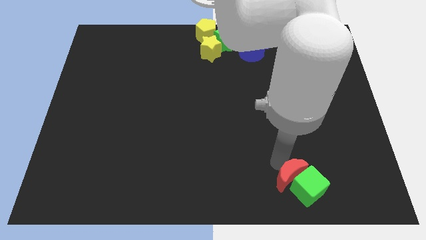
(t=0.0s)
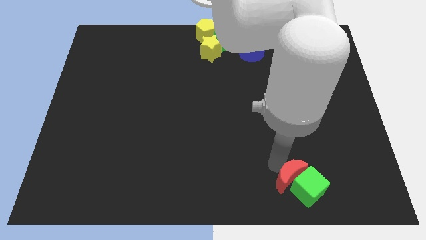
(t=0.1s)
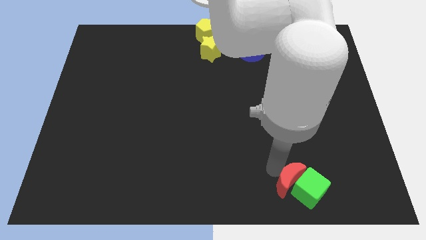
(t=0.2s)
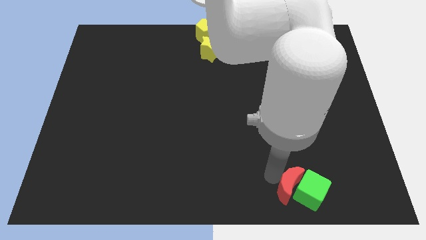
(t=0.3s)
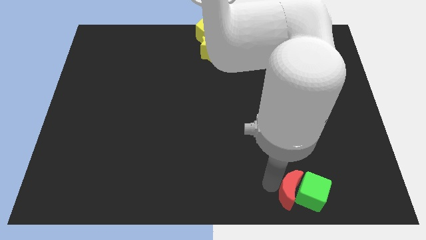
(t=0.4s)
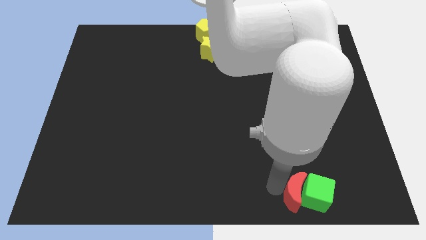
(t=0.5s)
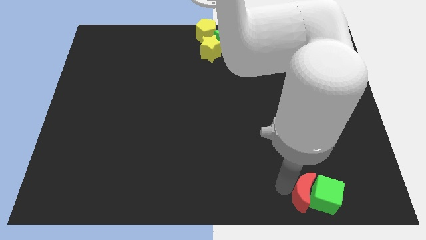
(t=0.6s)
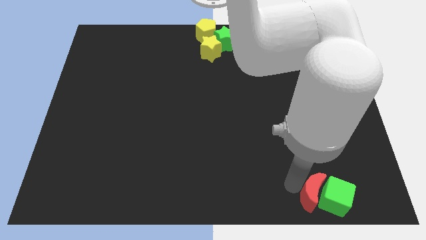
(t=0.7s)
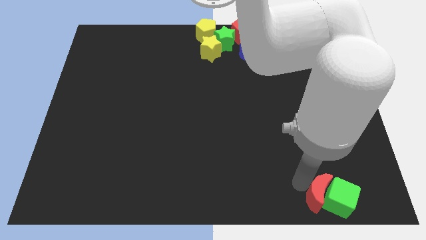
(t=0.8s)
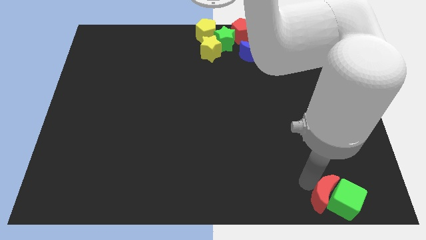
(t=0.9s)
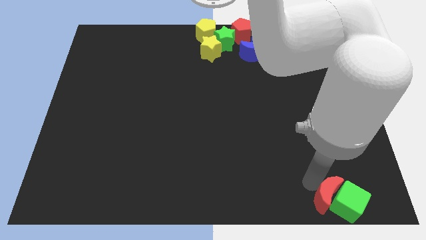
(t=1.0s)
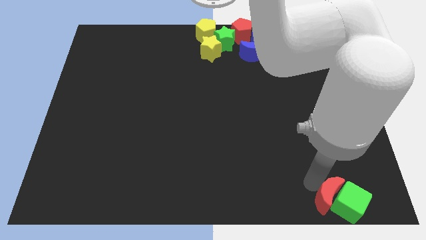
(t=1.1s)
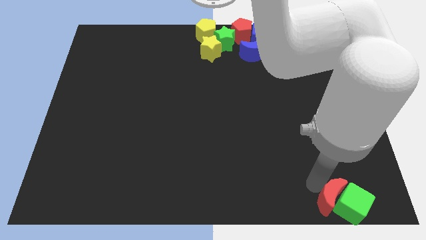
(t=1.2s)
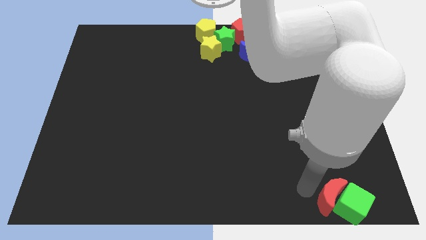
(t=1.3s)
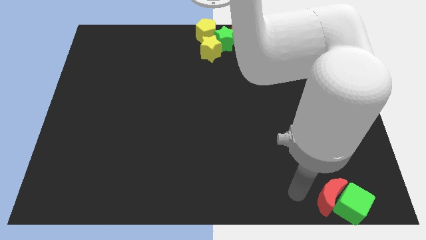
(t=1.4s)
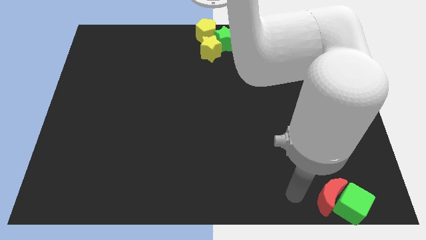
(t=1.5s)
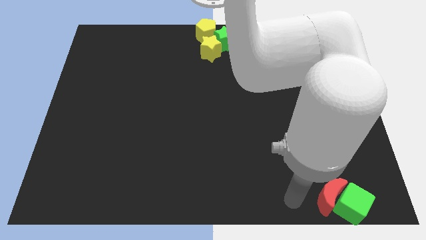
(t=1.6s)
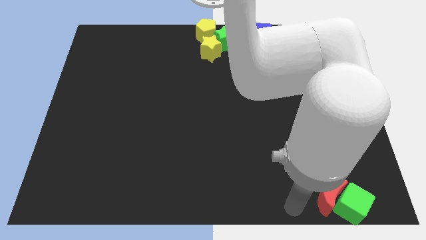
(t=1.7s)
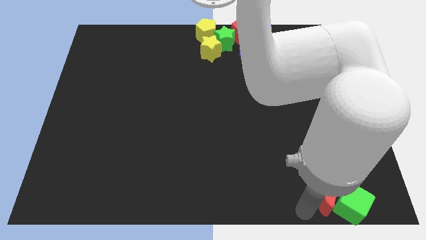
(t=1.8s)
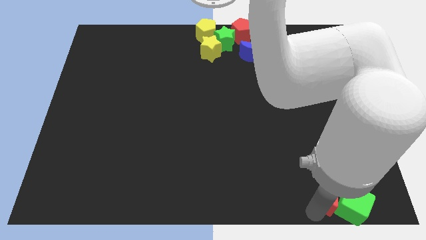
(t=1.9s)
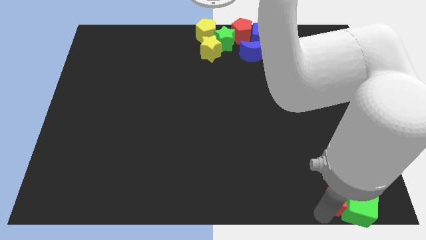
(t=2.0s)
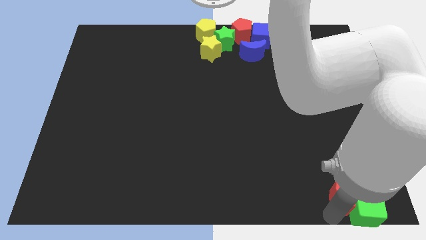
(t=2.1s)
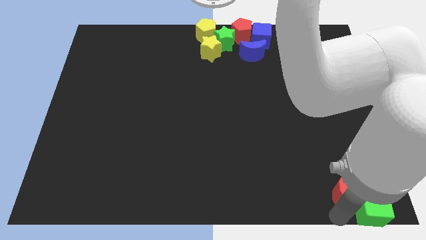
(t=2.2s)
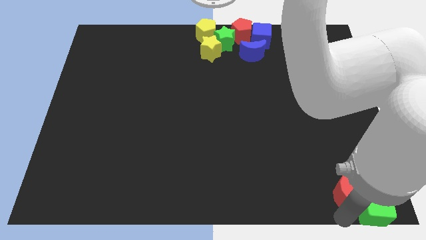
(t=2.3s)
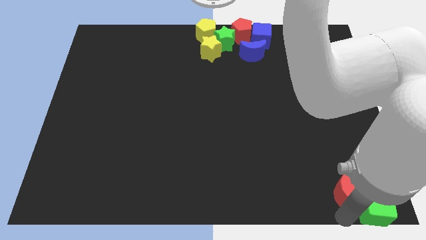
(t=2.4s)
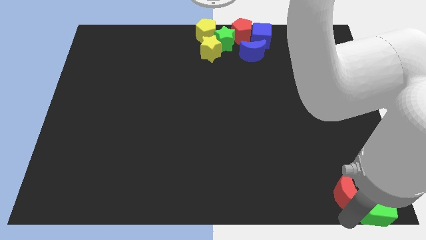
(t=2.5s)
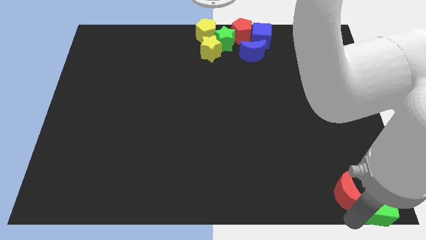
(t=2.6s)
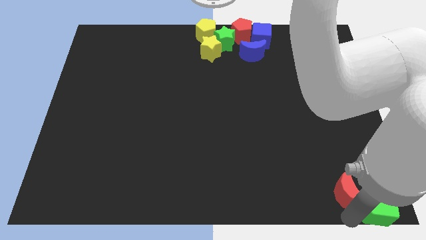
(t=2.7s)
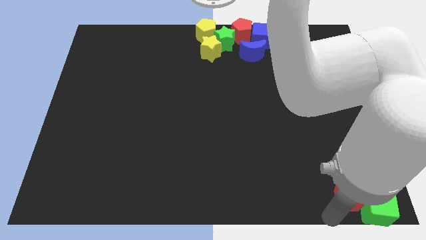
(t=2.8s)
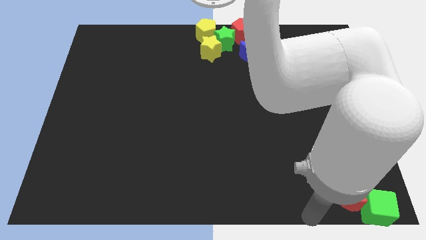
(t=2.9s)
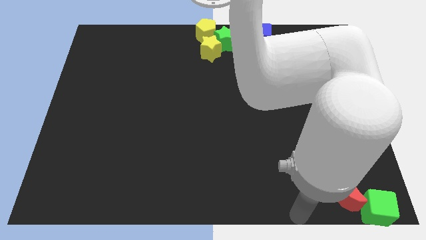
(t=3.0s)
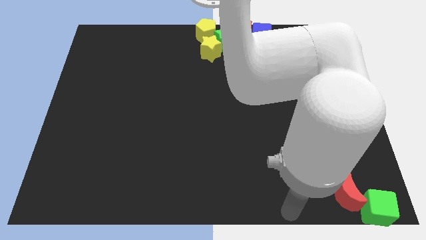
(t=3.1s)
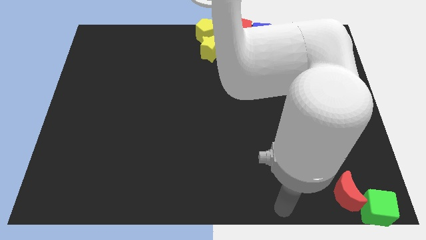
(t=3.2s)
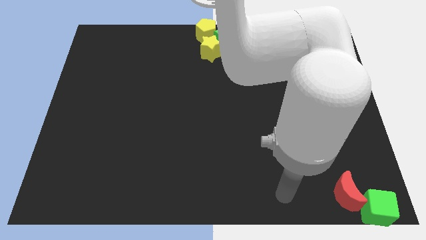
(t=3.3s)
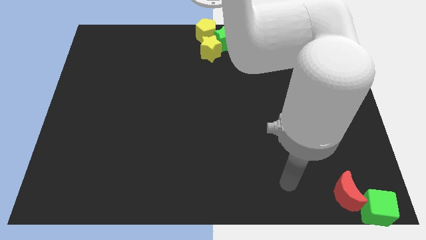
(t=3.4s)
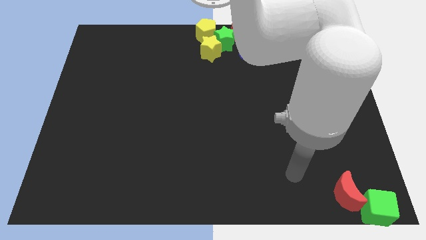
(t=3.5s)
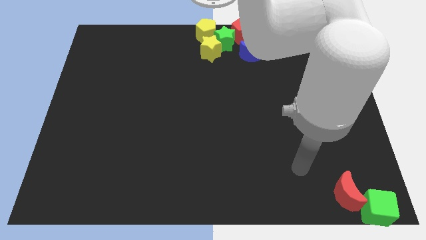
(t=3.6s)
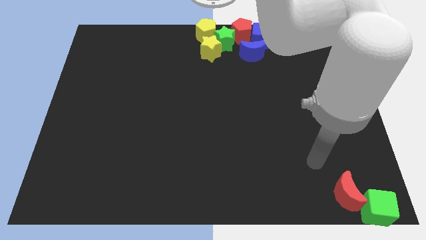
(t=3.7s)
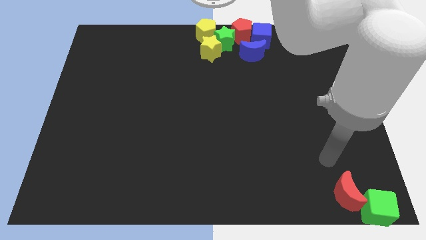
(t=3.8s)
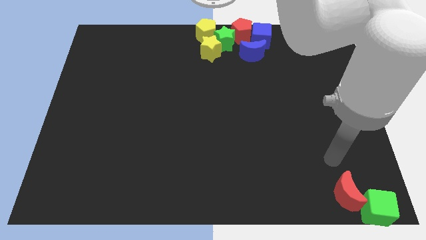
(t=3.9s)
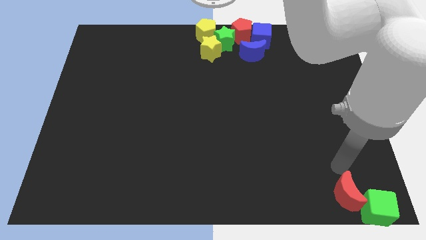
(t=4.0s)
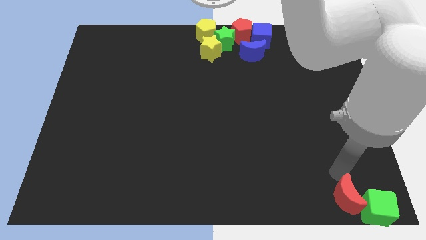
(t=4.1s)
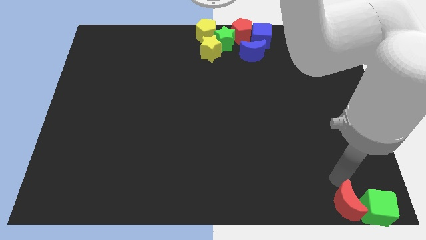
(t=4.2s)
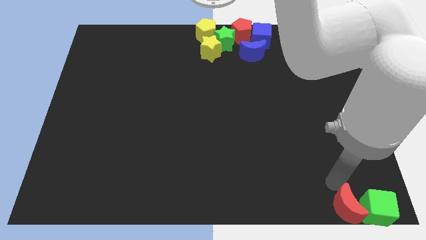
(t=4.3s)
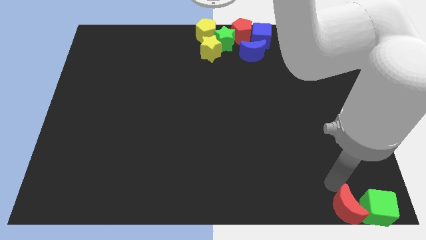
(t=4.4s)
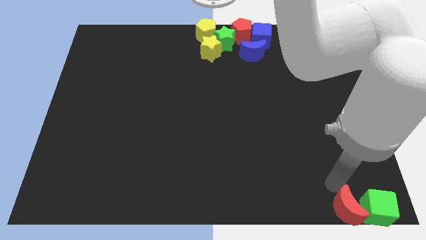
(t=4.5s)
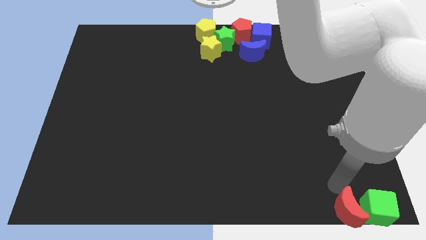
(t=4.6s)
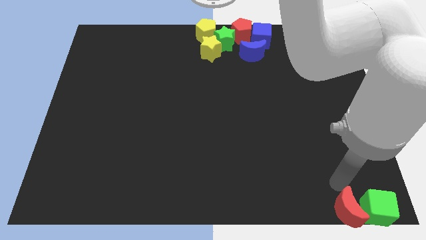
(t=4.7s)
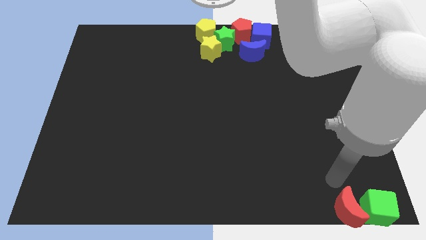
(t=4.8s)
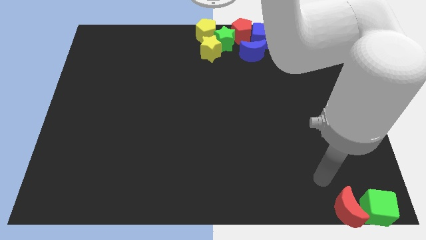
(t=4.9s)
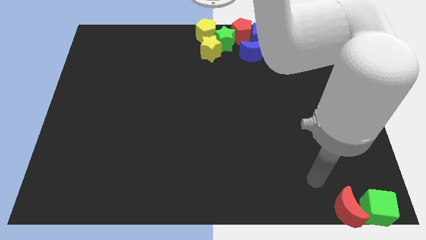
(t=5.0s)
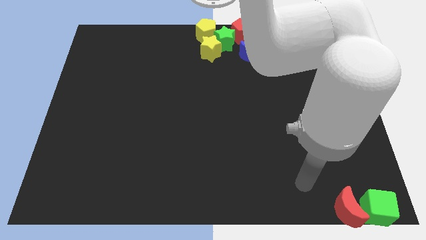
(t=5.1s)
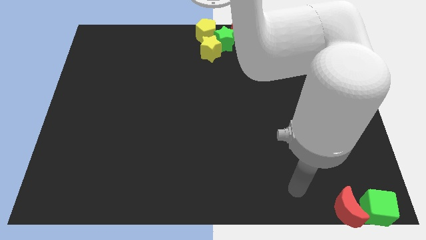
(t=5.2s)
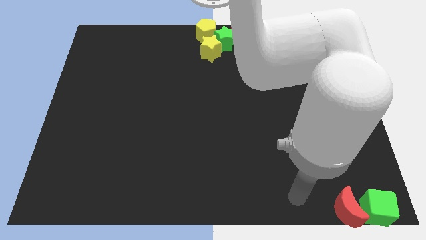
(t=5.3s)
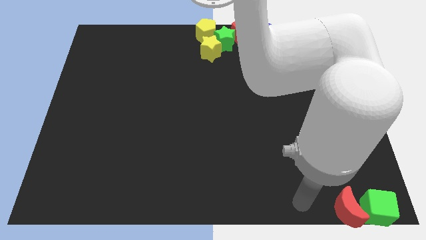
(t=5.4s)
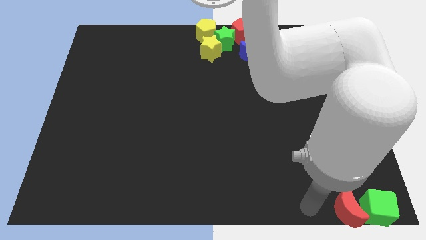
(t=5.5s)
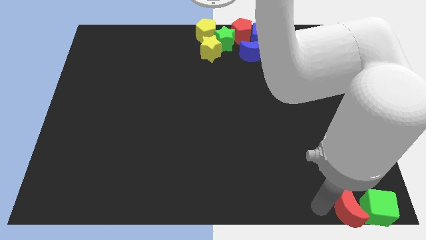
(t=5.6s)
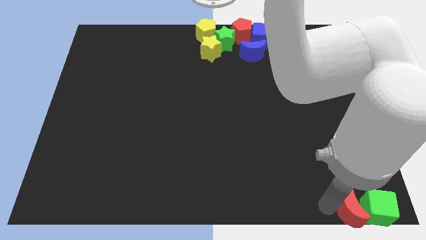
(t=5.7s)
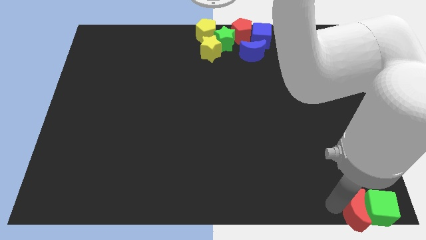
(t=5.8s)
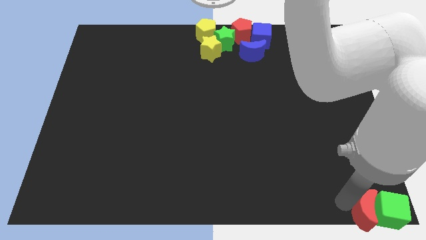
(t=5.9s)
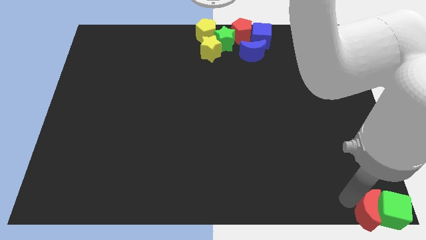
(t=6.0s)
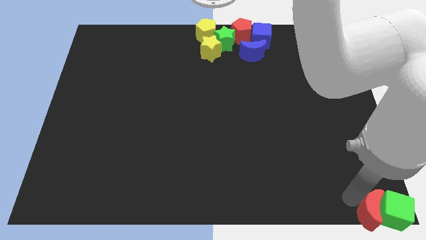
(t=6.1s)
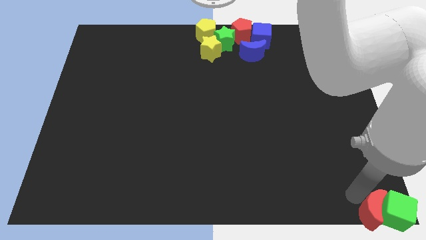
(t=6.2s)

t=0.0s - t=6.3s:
push the green cube and the red moon towards the bottom right corner

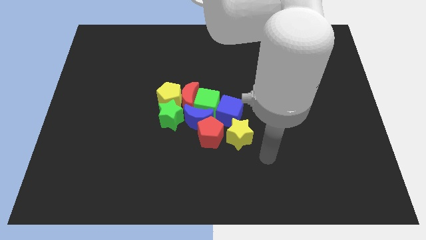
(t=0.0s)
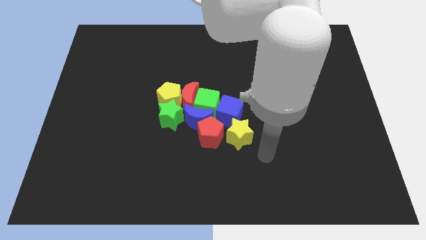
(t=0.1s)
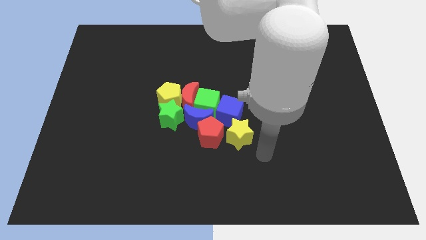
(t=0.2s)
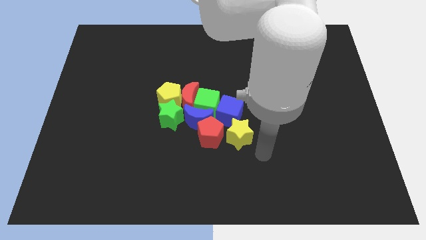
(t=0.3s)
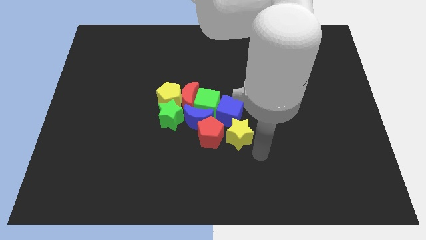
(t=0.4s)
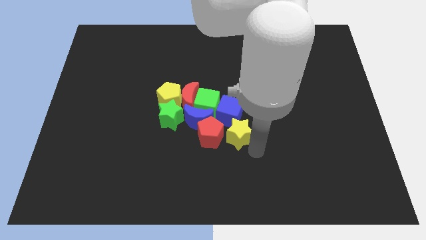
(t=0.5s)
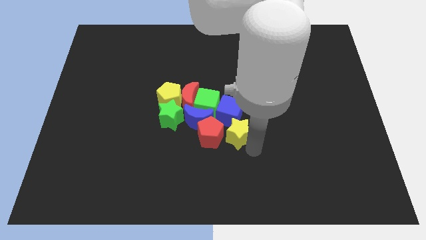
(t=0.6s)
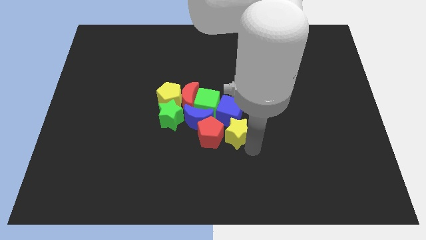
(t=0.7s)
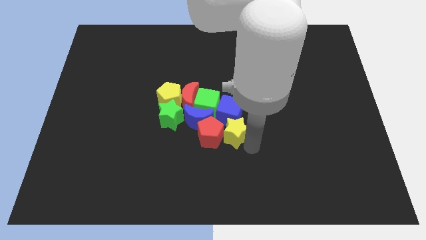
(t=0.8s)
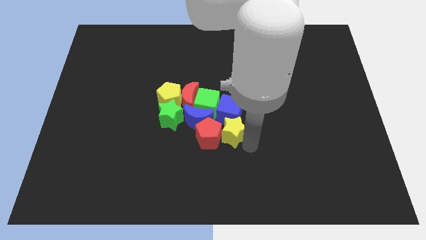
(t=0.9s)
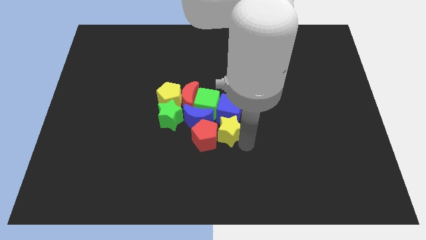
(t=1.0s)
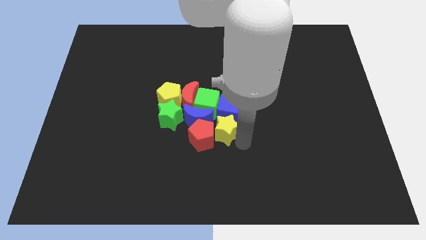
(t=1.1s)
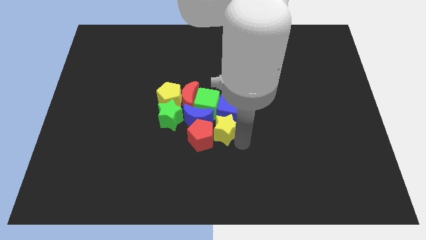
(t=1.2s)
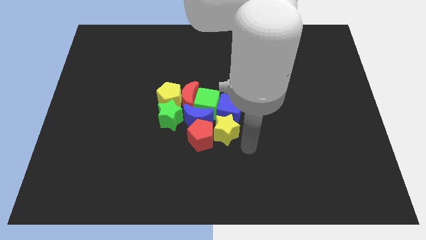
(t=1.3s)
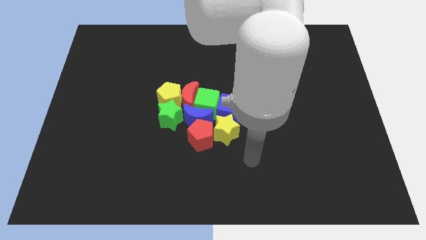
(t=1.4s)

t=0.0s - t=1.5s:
push the yellow star towards the red pentagon

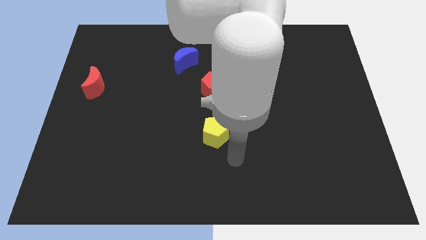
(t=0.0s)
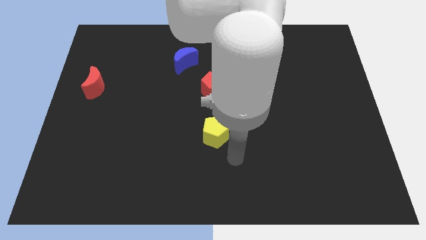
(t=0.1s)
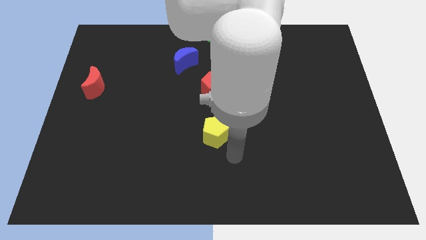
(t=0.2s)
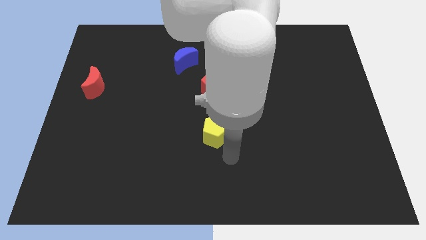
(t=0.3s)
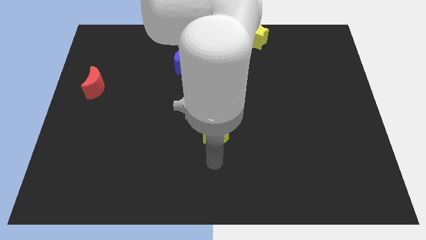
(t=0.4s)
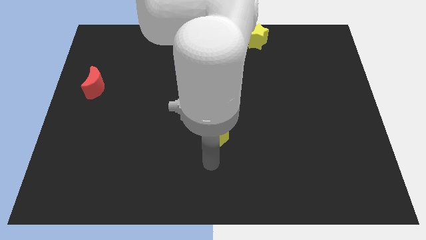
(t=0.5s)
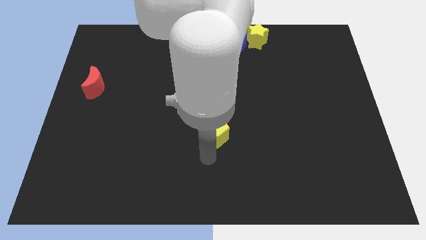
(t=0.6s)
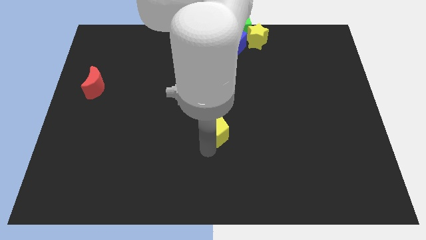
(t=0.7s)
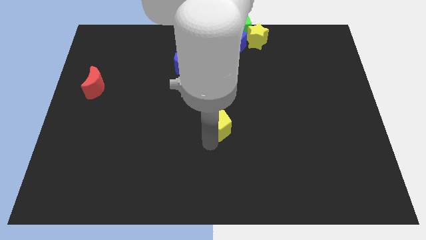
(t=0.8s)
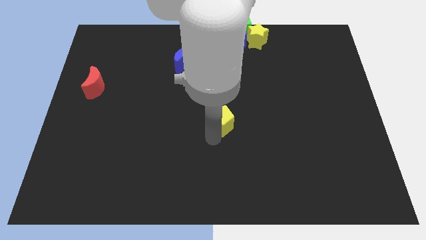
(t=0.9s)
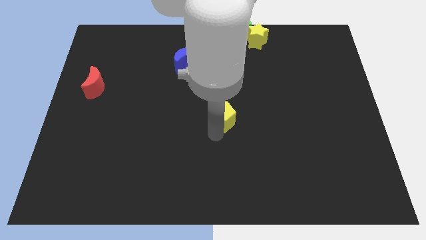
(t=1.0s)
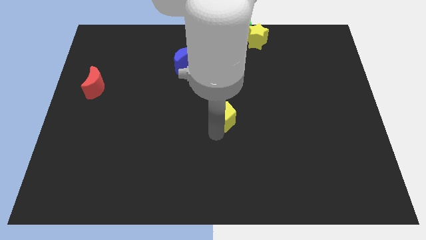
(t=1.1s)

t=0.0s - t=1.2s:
push the yellow pentagon slightly to the top
